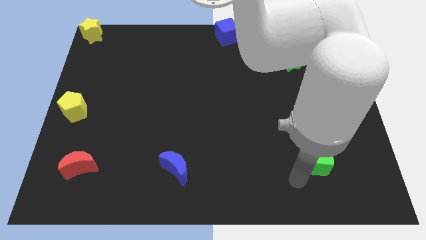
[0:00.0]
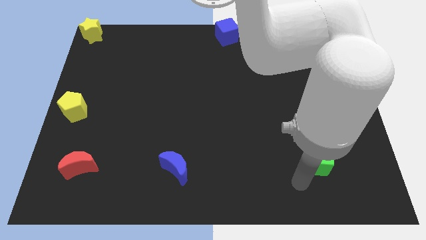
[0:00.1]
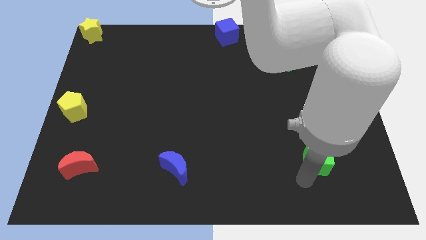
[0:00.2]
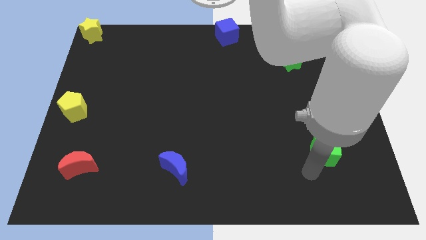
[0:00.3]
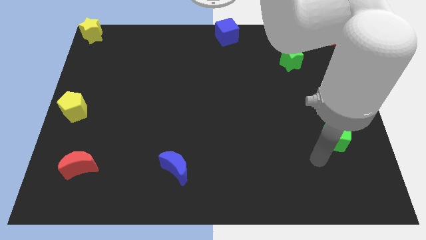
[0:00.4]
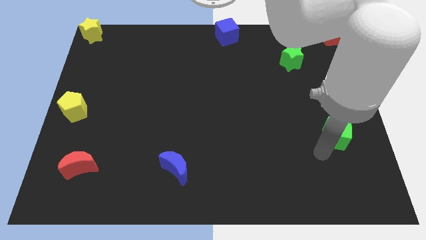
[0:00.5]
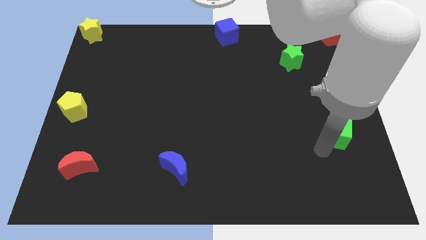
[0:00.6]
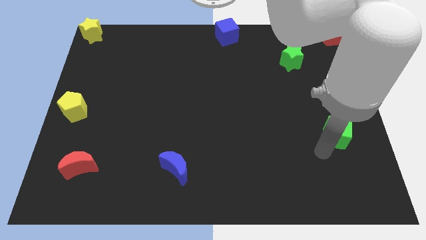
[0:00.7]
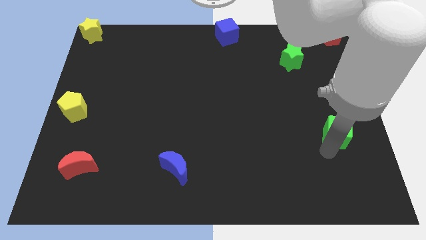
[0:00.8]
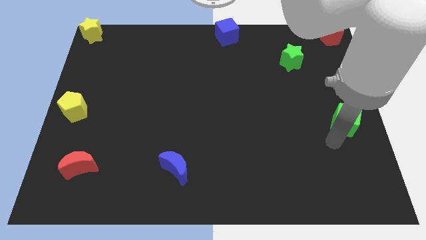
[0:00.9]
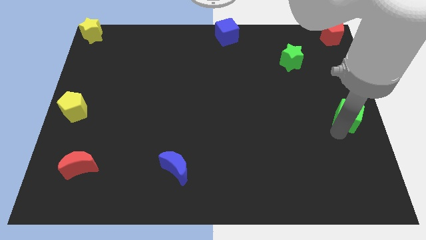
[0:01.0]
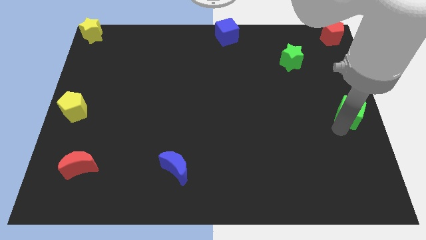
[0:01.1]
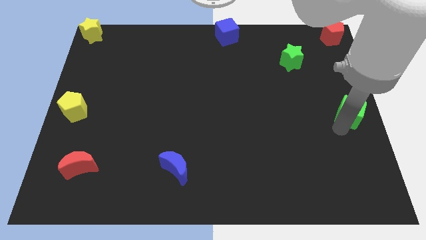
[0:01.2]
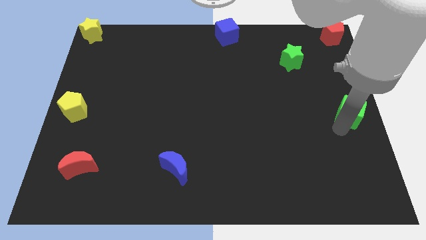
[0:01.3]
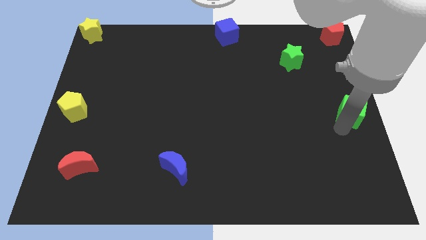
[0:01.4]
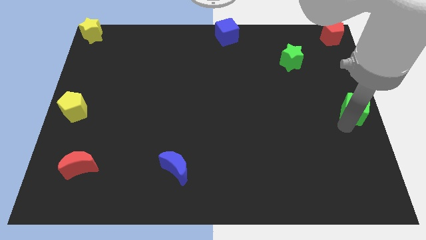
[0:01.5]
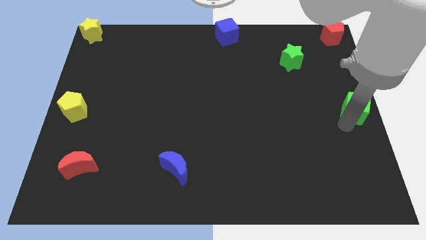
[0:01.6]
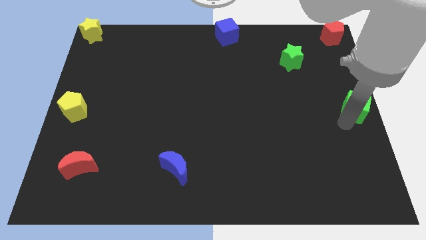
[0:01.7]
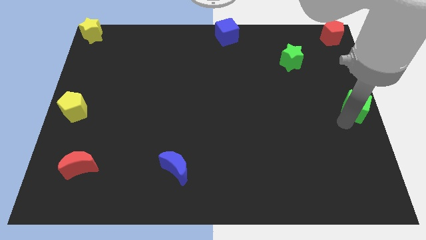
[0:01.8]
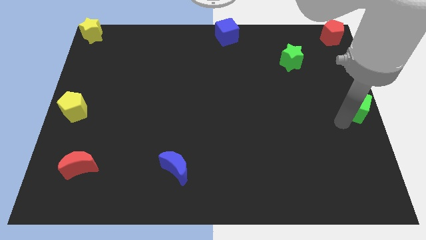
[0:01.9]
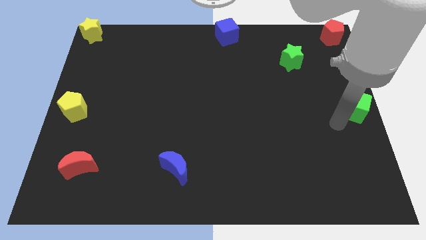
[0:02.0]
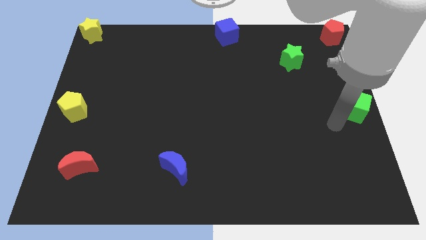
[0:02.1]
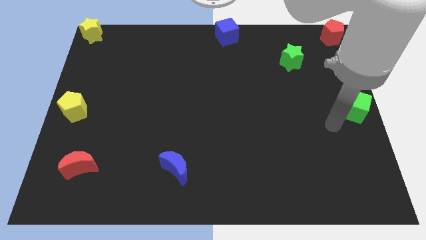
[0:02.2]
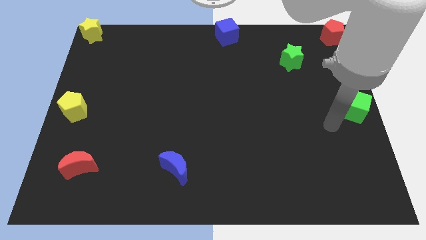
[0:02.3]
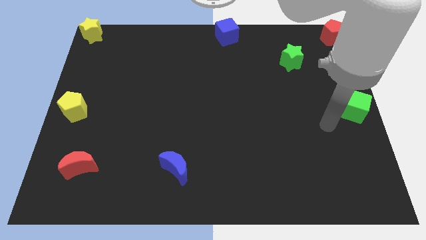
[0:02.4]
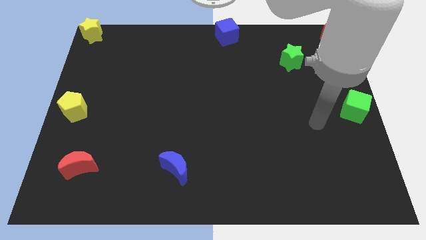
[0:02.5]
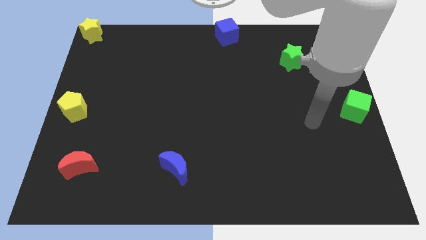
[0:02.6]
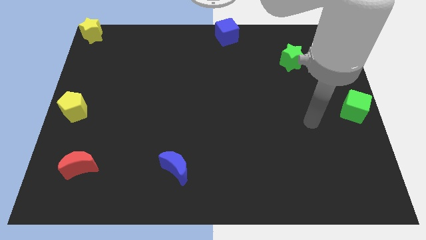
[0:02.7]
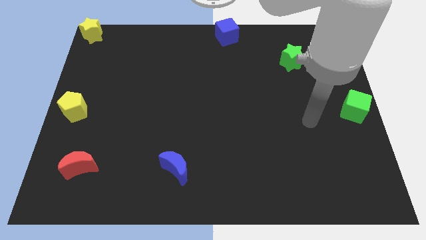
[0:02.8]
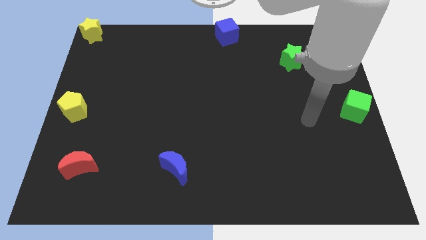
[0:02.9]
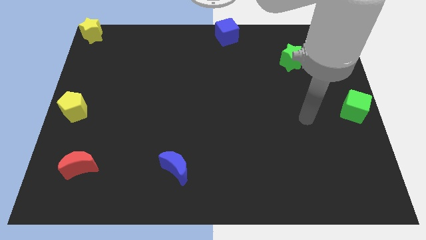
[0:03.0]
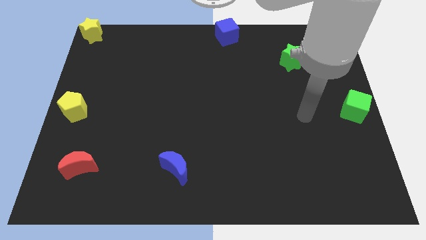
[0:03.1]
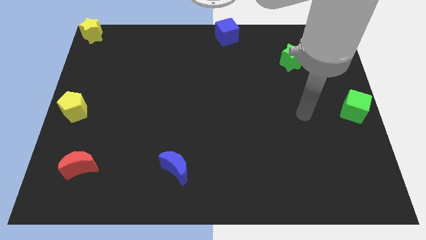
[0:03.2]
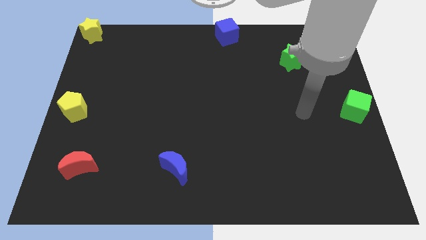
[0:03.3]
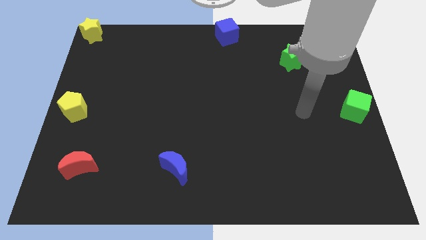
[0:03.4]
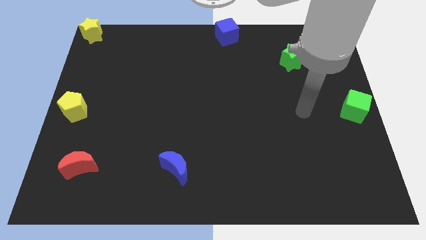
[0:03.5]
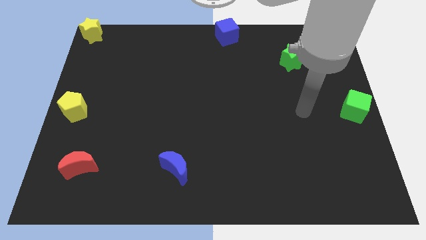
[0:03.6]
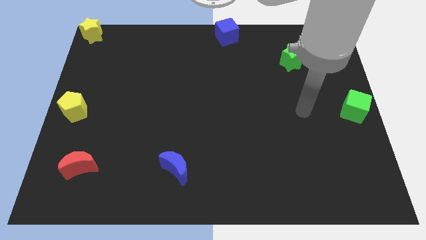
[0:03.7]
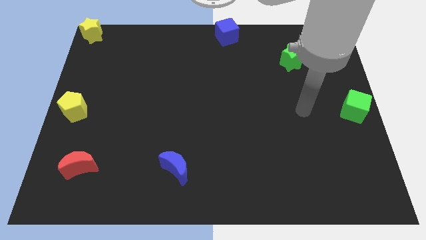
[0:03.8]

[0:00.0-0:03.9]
drag green cube to the center right of the board

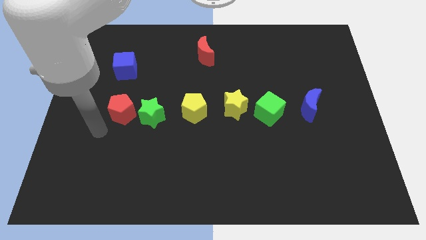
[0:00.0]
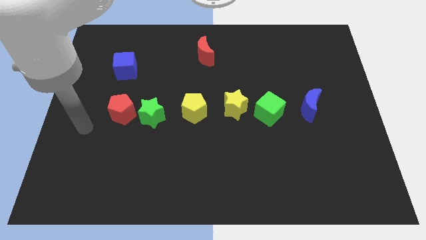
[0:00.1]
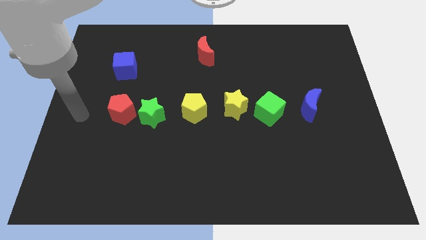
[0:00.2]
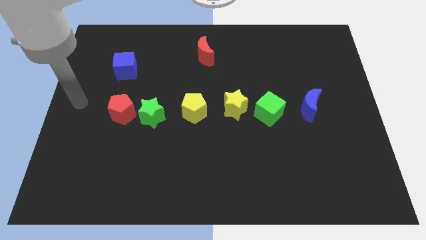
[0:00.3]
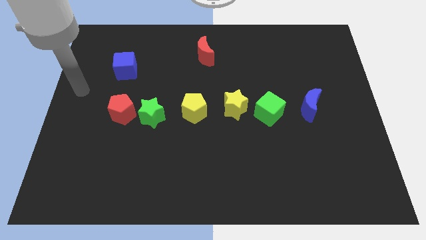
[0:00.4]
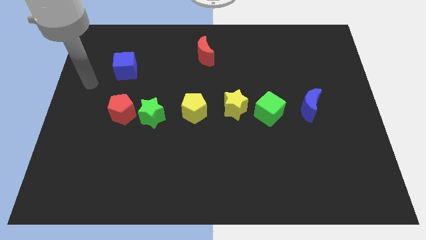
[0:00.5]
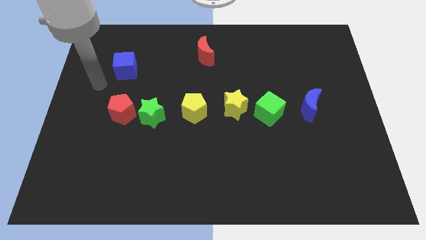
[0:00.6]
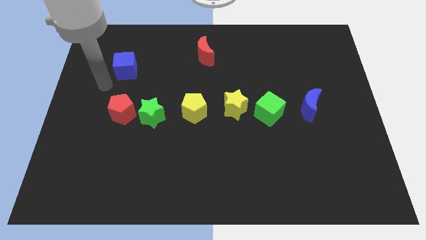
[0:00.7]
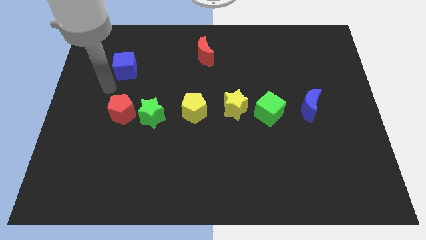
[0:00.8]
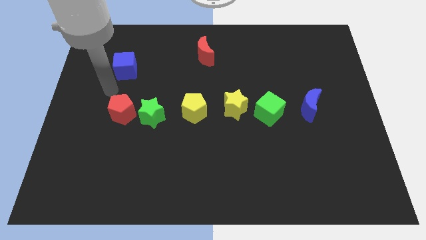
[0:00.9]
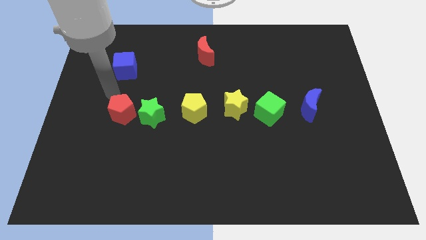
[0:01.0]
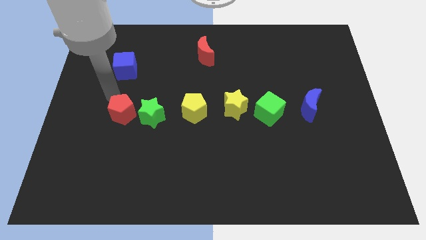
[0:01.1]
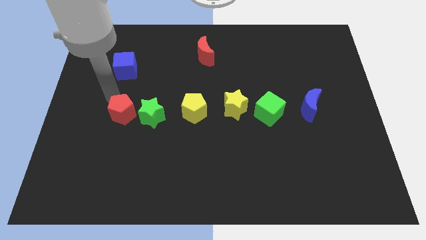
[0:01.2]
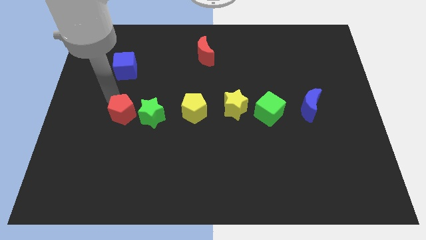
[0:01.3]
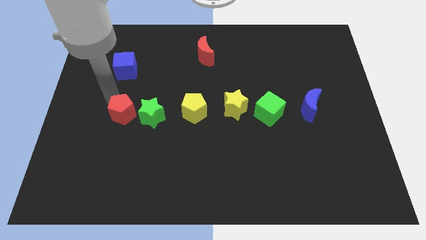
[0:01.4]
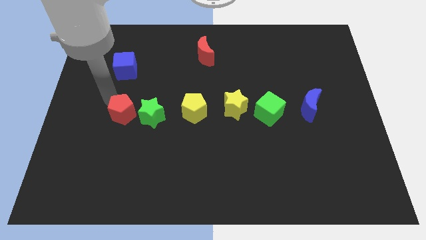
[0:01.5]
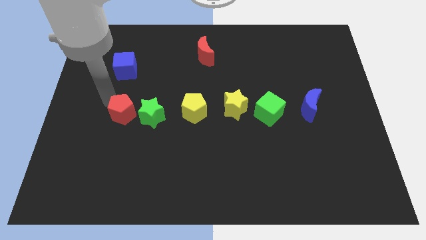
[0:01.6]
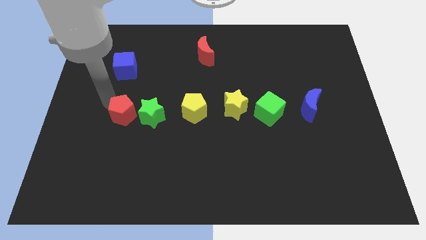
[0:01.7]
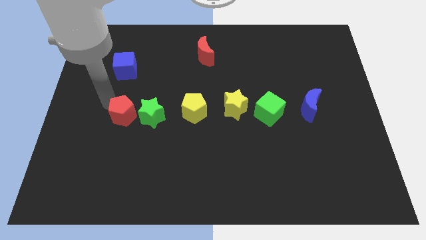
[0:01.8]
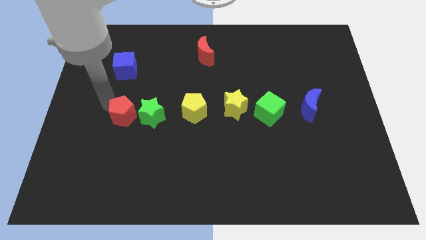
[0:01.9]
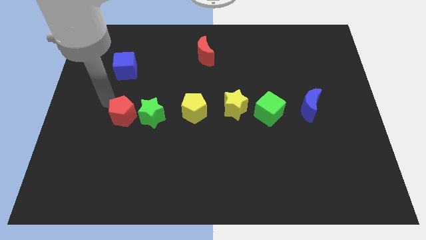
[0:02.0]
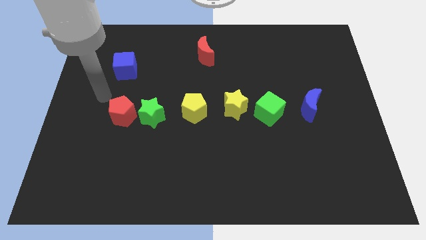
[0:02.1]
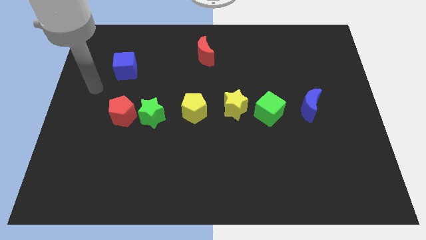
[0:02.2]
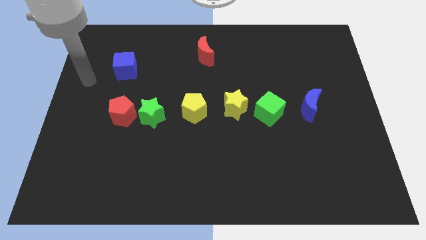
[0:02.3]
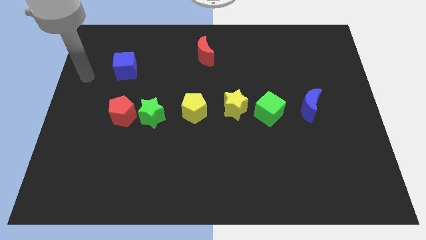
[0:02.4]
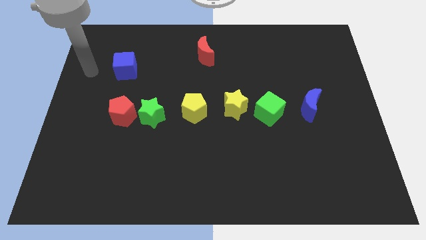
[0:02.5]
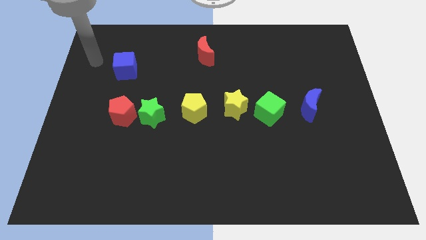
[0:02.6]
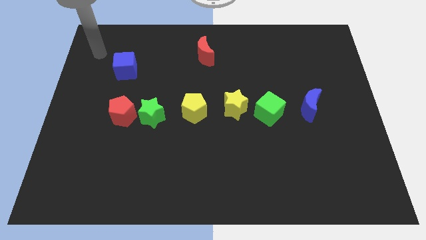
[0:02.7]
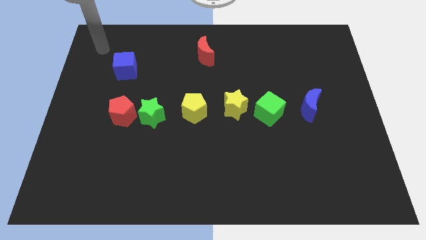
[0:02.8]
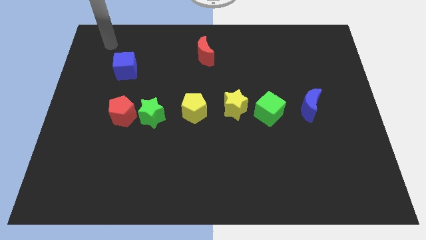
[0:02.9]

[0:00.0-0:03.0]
adjust the red pentagon beside the green star to make a horizontal line

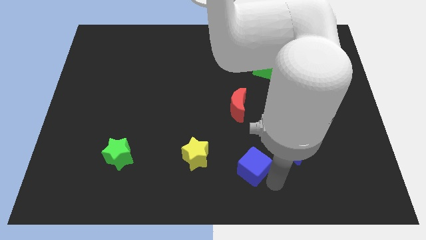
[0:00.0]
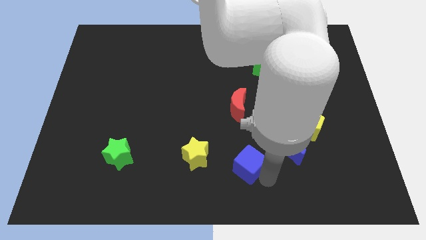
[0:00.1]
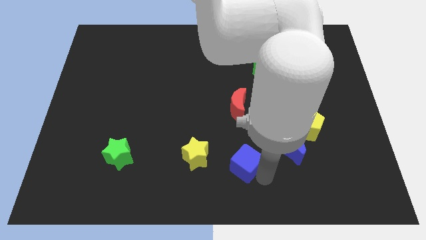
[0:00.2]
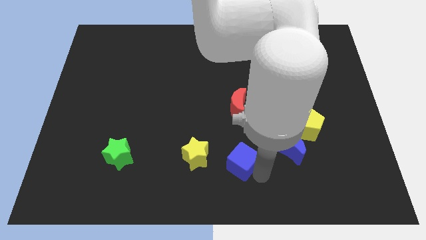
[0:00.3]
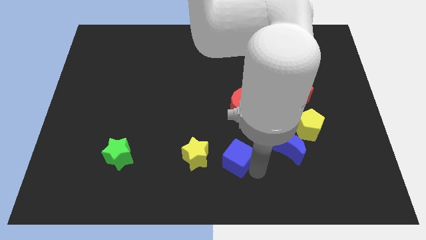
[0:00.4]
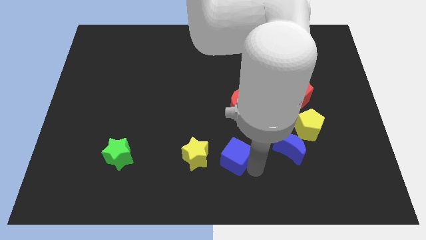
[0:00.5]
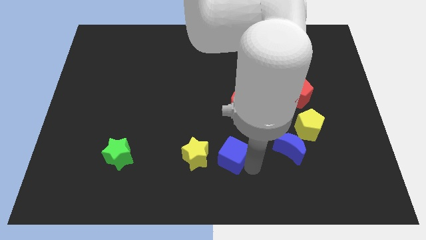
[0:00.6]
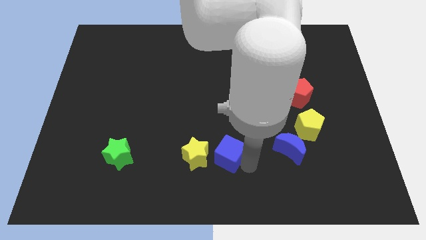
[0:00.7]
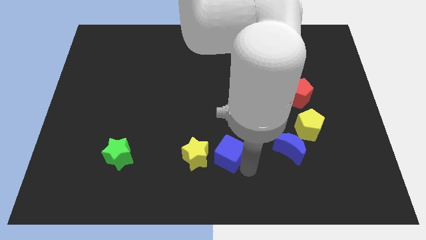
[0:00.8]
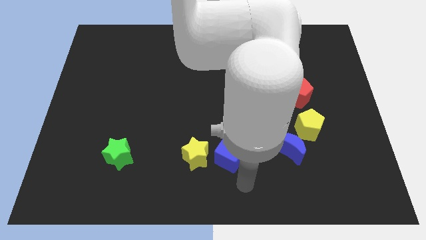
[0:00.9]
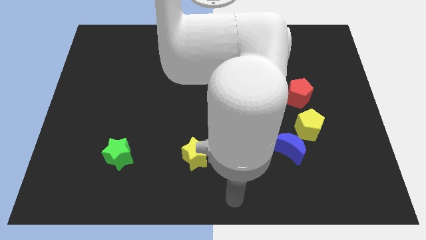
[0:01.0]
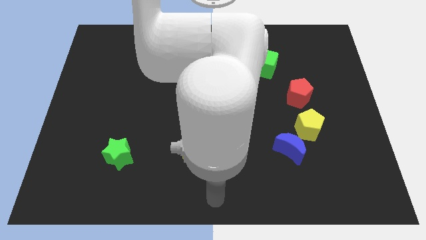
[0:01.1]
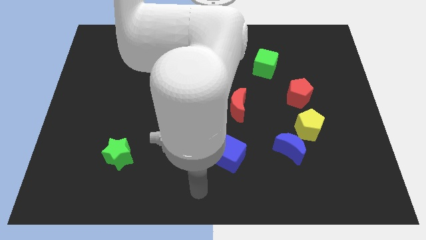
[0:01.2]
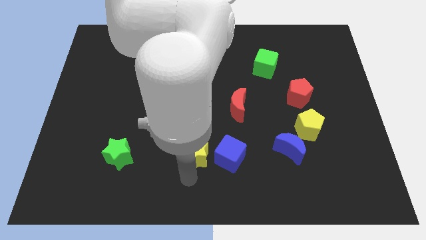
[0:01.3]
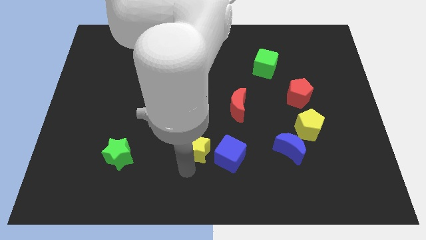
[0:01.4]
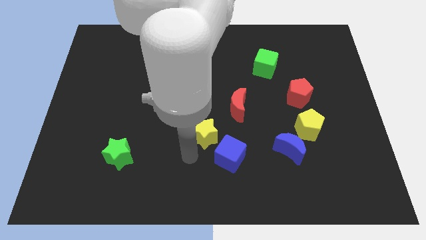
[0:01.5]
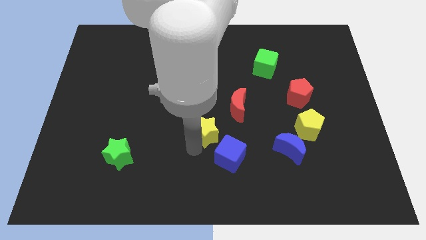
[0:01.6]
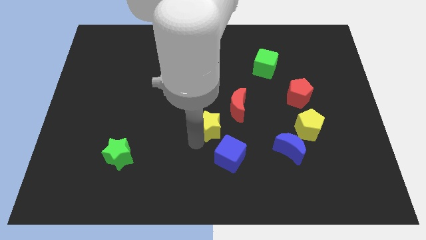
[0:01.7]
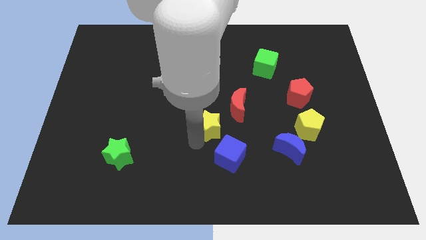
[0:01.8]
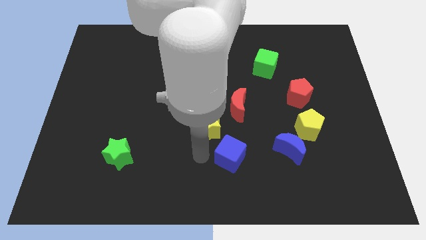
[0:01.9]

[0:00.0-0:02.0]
move the blue cube close to the yellow star
